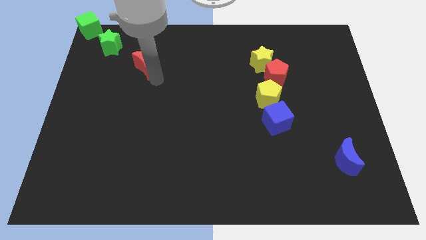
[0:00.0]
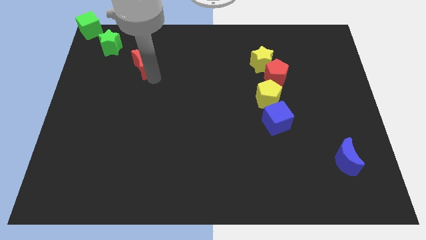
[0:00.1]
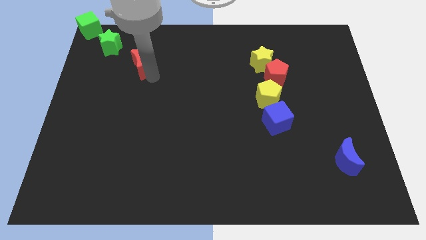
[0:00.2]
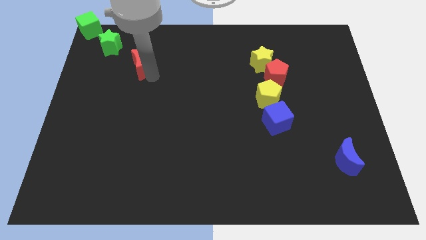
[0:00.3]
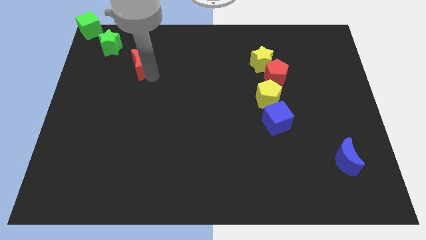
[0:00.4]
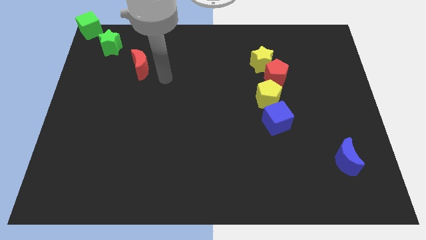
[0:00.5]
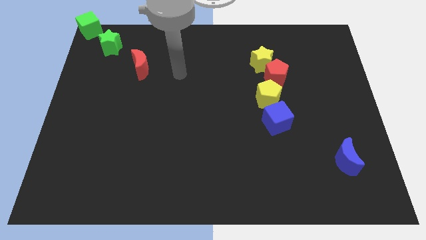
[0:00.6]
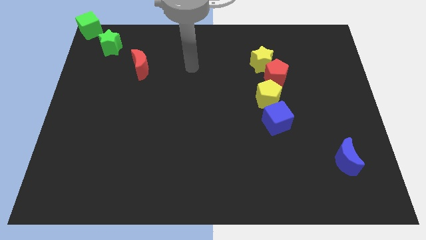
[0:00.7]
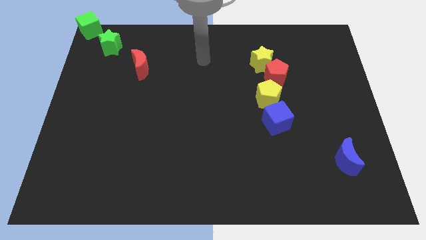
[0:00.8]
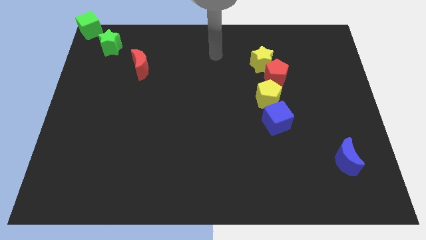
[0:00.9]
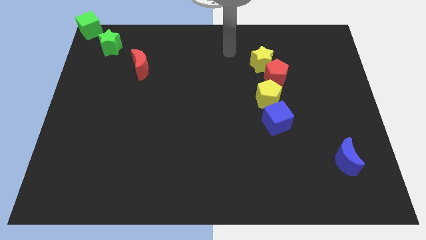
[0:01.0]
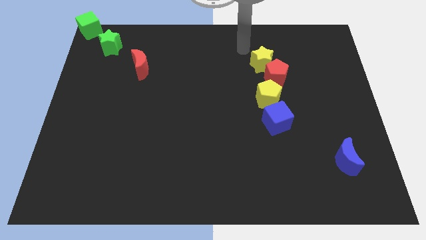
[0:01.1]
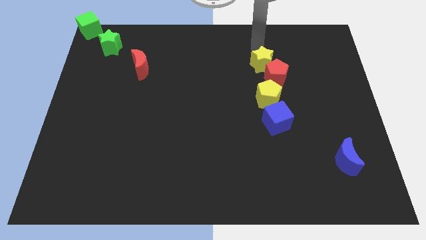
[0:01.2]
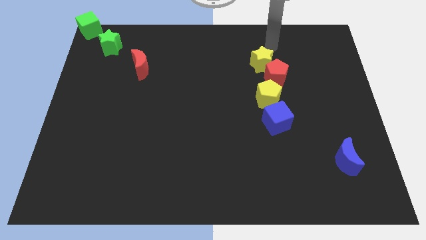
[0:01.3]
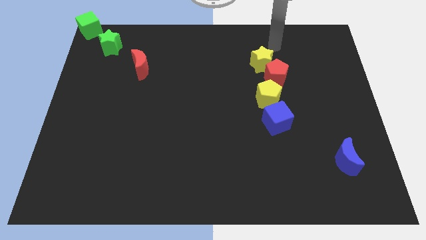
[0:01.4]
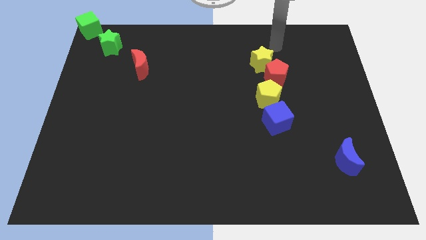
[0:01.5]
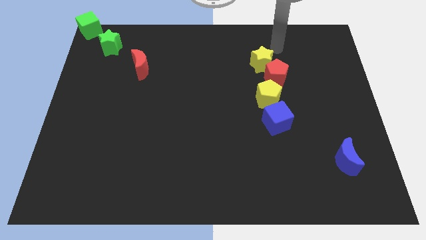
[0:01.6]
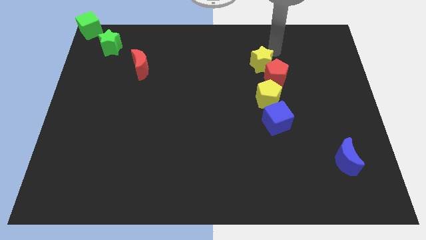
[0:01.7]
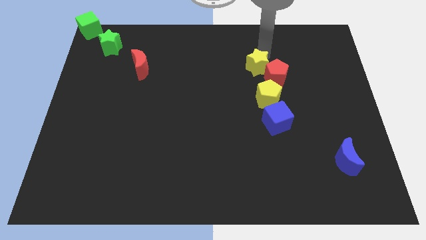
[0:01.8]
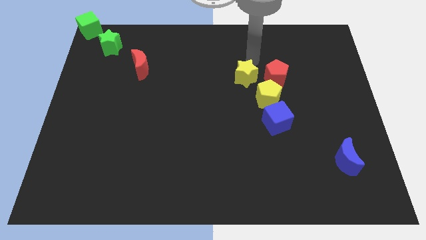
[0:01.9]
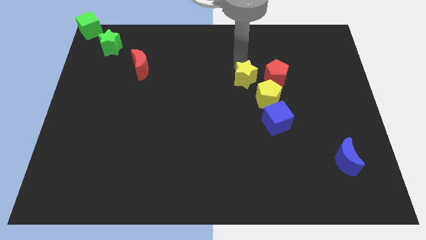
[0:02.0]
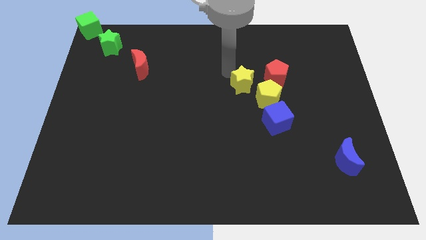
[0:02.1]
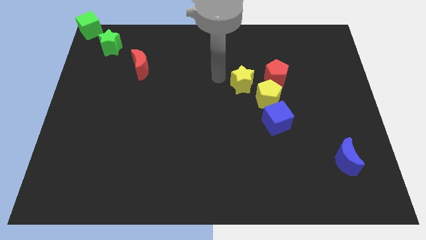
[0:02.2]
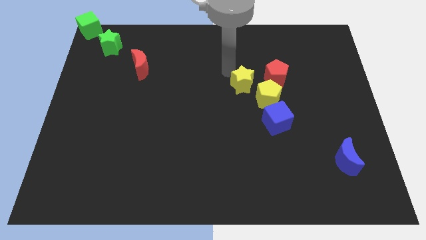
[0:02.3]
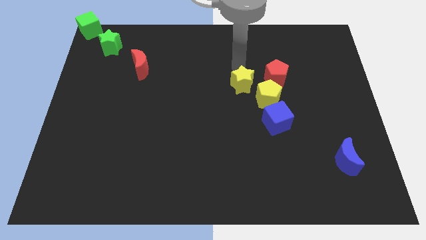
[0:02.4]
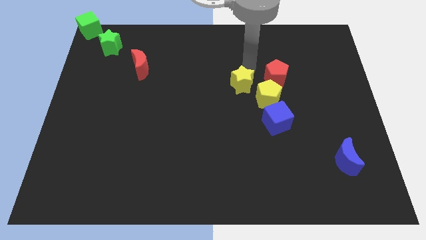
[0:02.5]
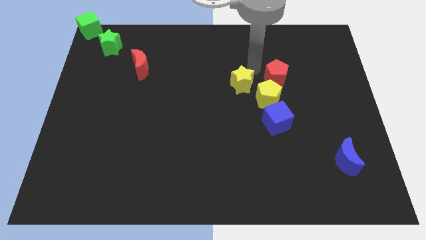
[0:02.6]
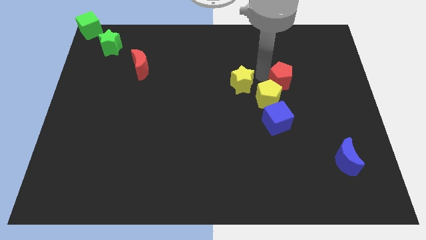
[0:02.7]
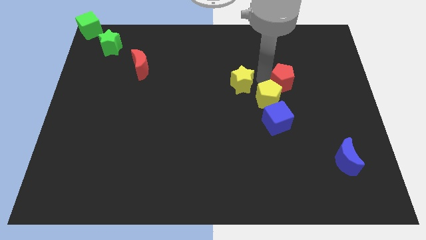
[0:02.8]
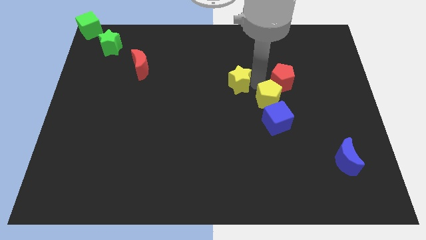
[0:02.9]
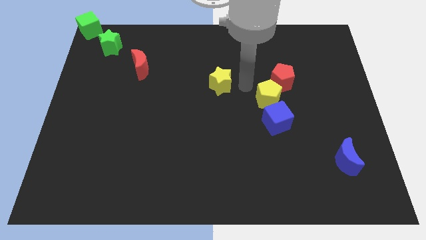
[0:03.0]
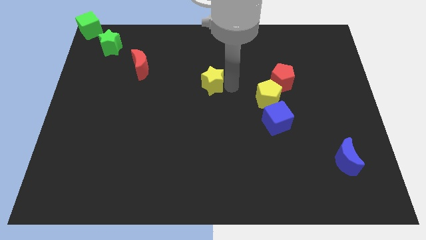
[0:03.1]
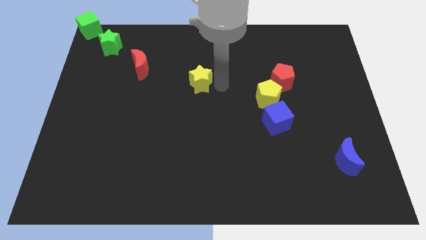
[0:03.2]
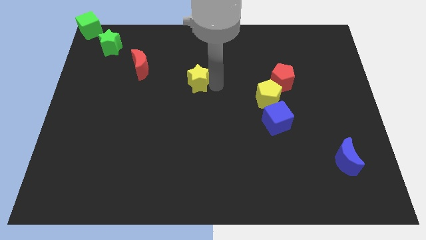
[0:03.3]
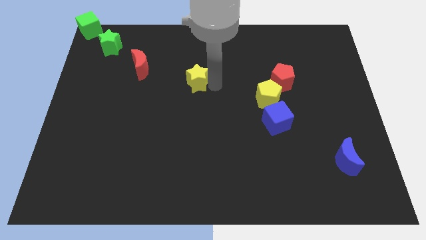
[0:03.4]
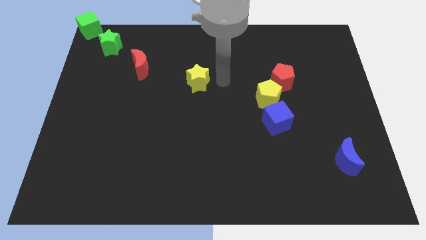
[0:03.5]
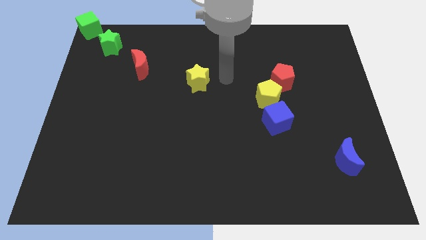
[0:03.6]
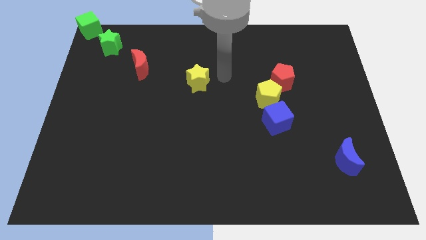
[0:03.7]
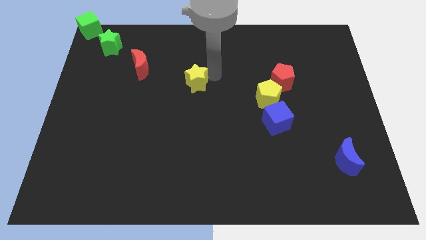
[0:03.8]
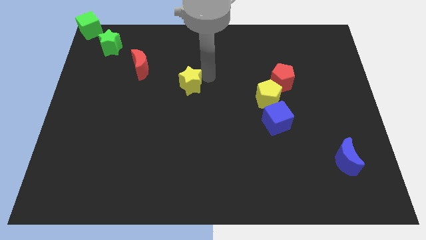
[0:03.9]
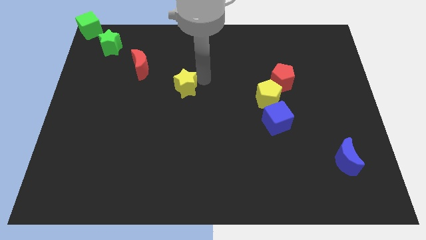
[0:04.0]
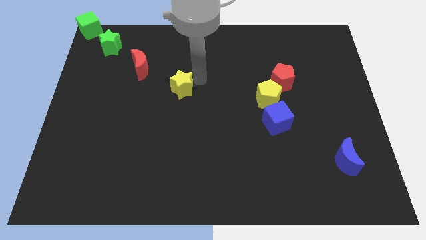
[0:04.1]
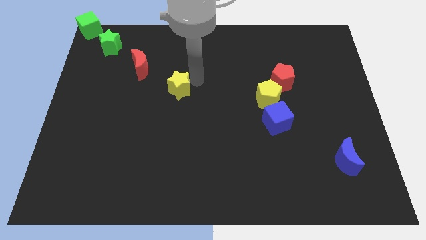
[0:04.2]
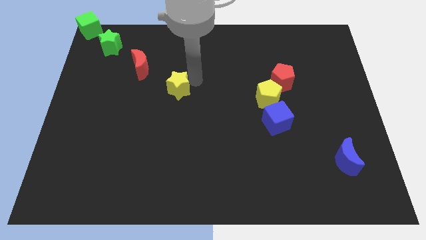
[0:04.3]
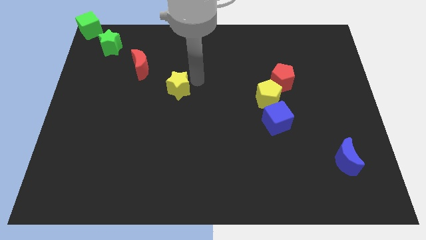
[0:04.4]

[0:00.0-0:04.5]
place the yellow star diagonally bottom right to the red moon

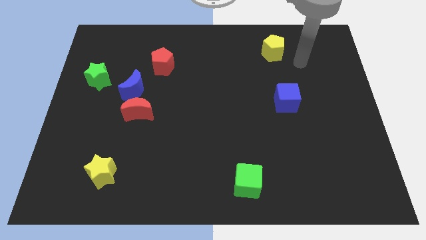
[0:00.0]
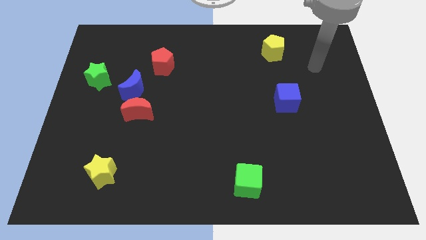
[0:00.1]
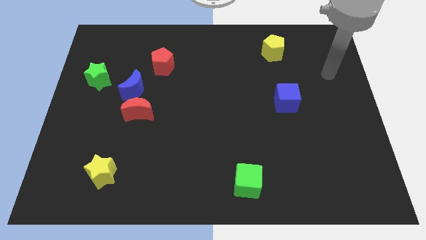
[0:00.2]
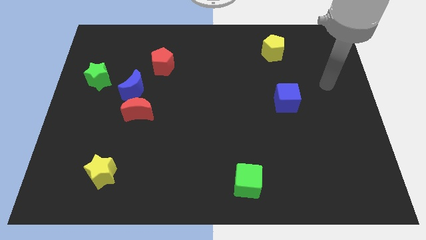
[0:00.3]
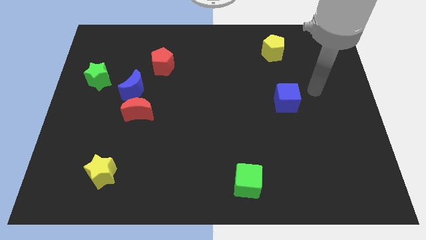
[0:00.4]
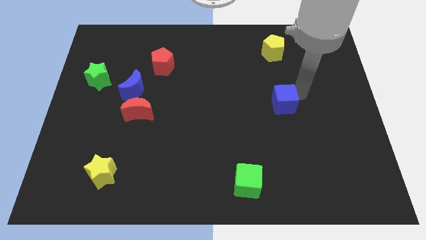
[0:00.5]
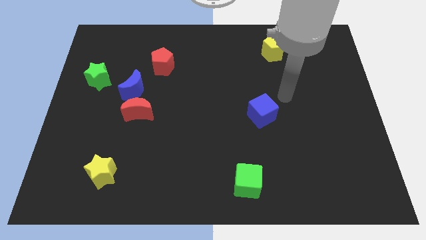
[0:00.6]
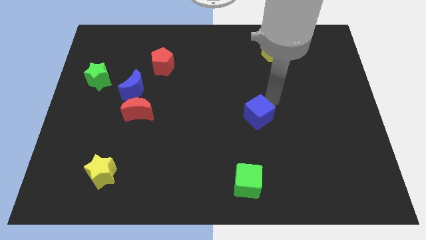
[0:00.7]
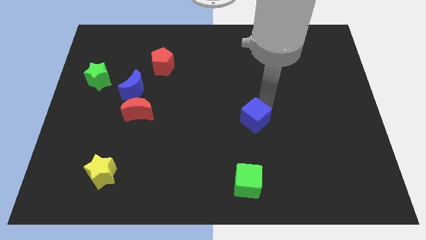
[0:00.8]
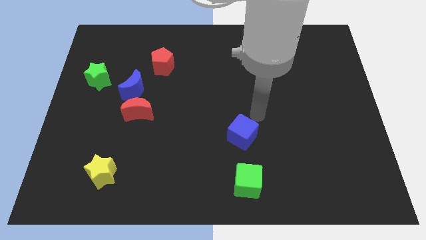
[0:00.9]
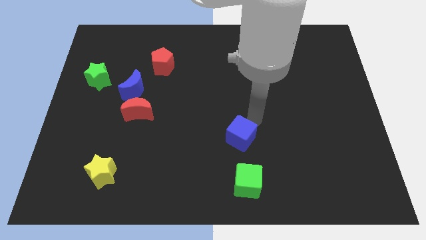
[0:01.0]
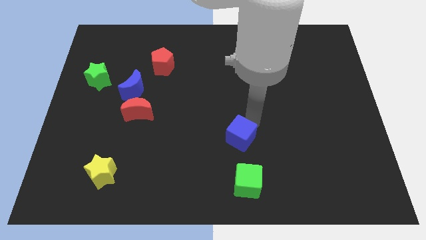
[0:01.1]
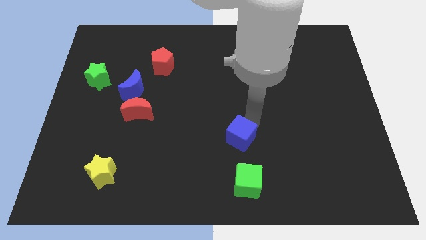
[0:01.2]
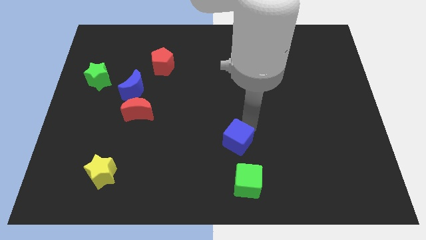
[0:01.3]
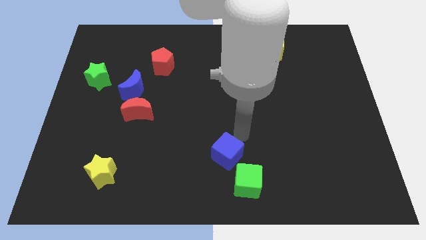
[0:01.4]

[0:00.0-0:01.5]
push the blue cube close to the green cube

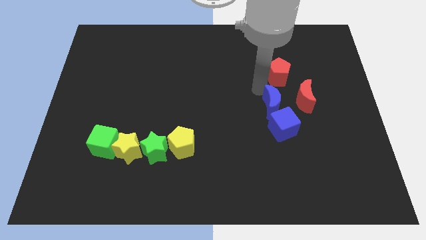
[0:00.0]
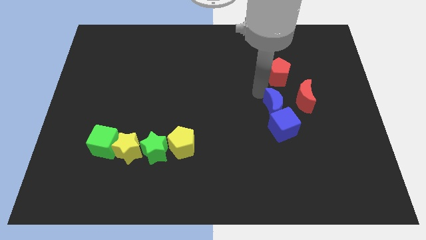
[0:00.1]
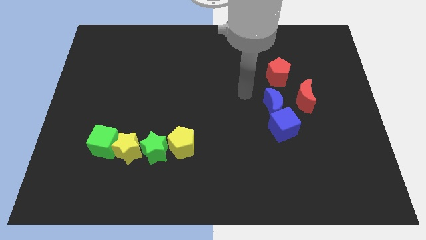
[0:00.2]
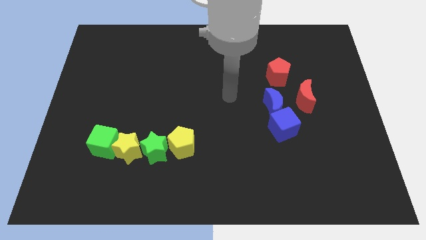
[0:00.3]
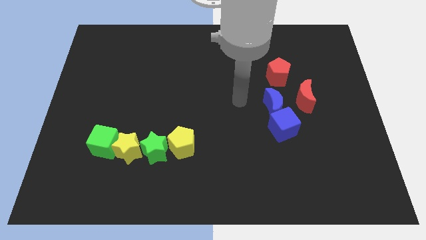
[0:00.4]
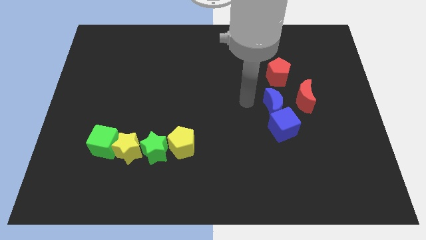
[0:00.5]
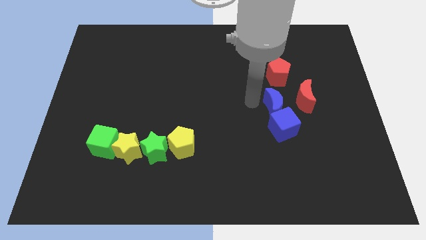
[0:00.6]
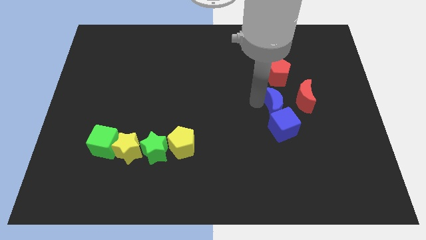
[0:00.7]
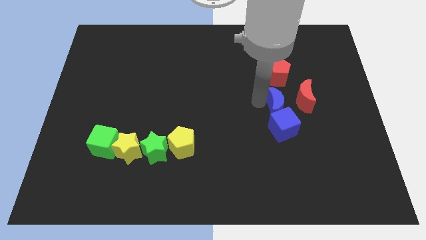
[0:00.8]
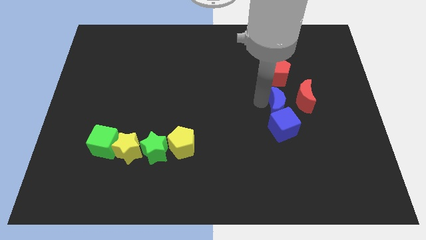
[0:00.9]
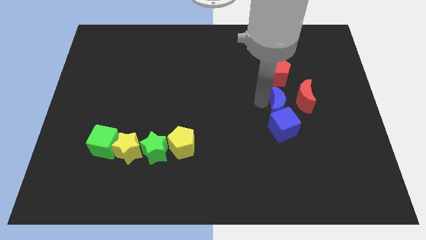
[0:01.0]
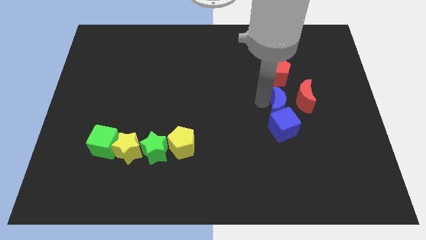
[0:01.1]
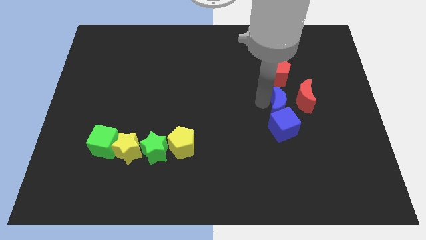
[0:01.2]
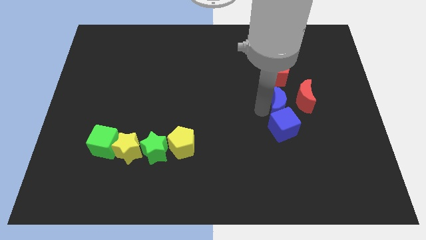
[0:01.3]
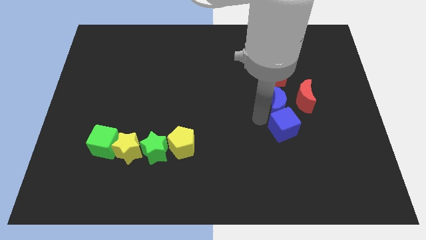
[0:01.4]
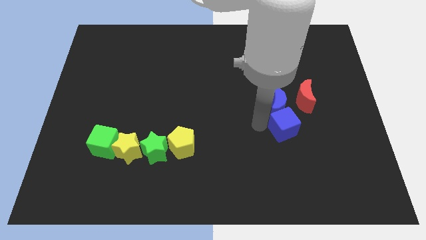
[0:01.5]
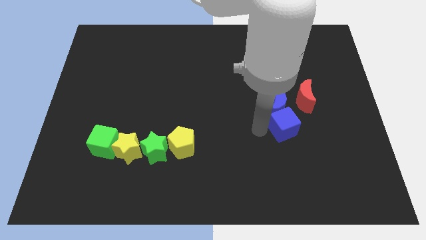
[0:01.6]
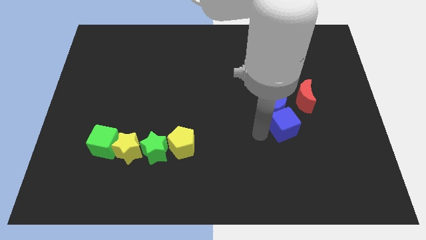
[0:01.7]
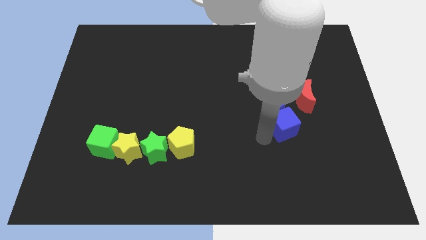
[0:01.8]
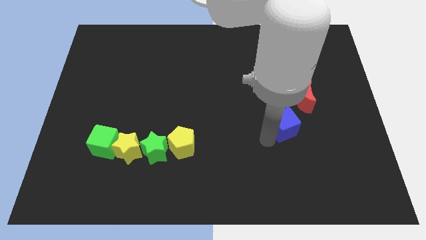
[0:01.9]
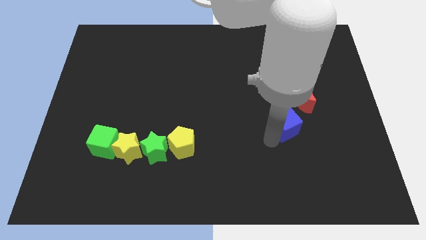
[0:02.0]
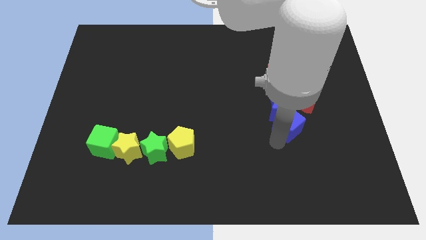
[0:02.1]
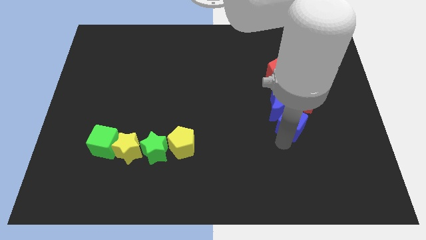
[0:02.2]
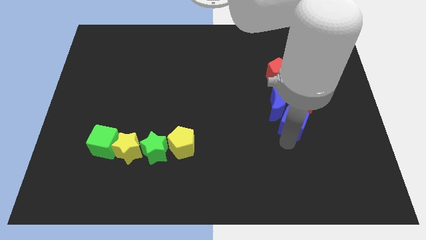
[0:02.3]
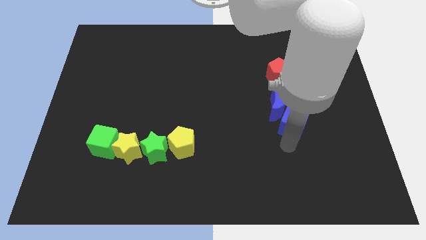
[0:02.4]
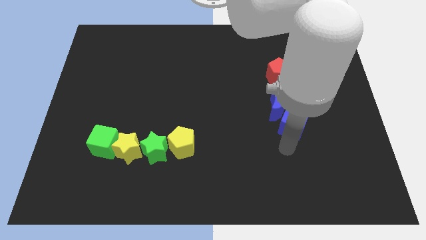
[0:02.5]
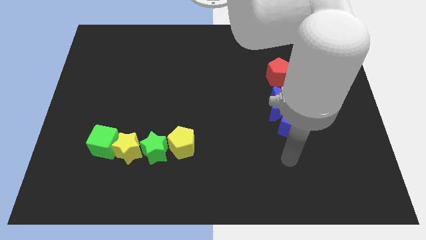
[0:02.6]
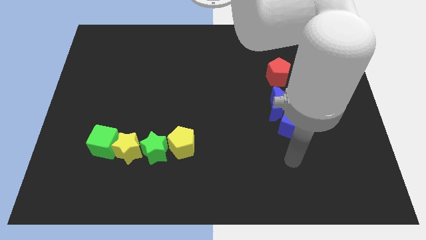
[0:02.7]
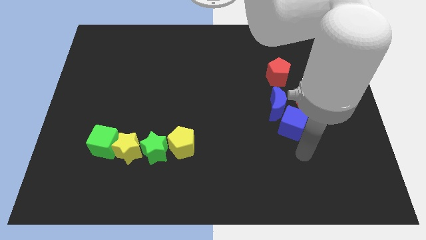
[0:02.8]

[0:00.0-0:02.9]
slightly touch blue moon blue cube
